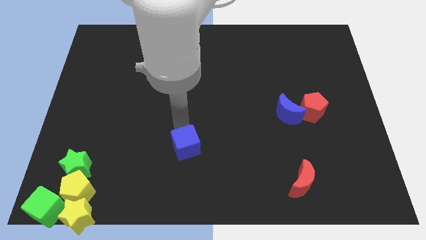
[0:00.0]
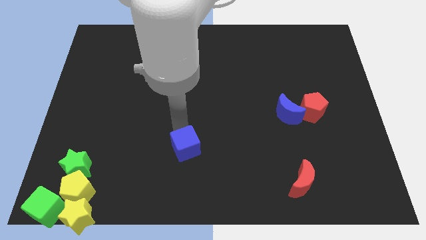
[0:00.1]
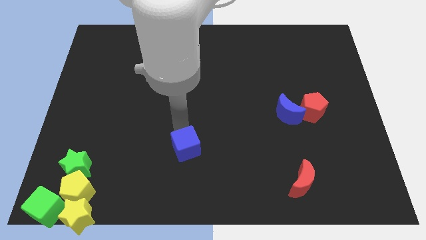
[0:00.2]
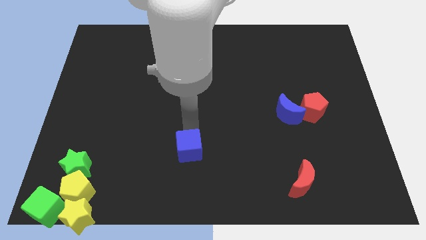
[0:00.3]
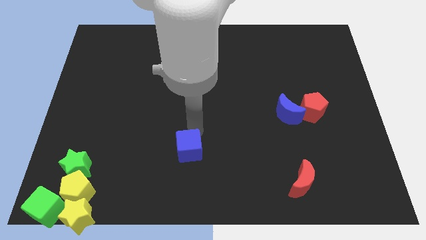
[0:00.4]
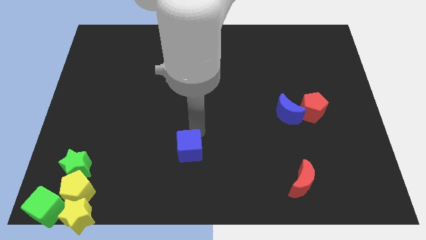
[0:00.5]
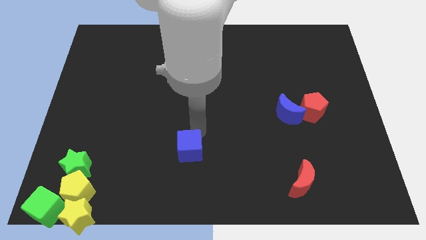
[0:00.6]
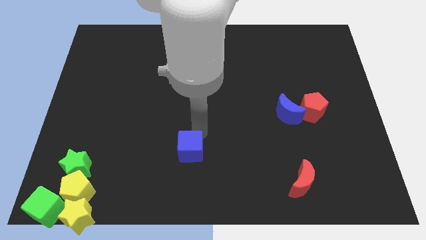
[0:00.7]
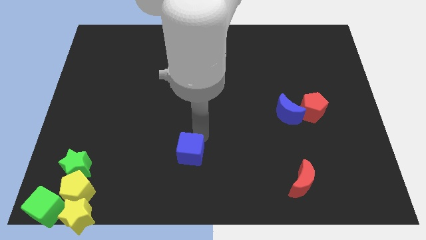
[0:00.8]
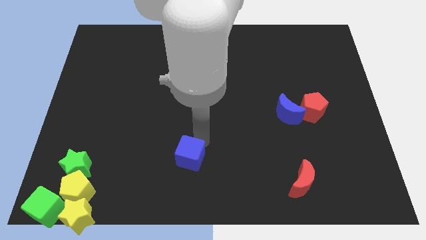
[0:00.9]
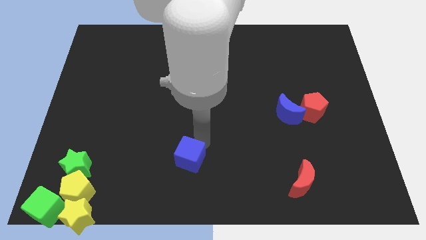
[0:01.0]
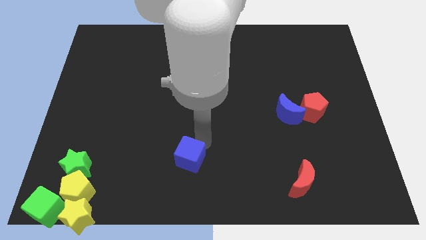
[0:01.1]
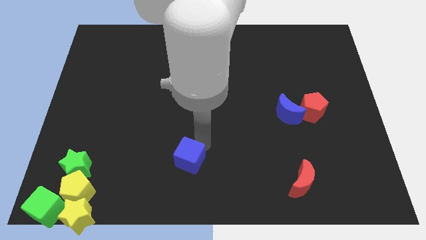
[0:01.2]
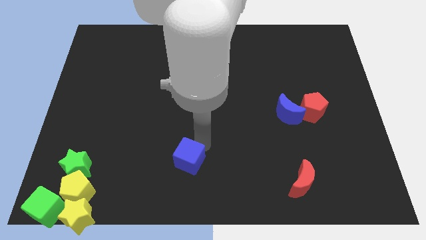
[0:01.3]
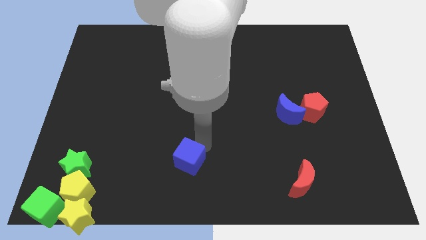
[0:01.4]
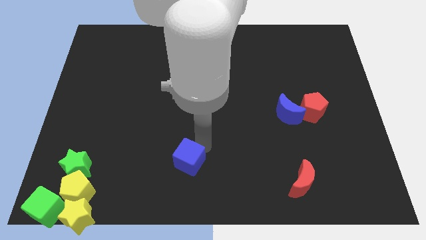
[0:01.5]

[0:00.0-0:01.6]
push the blue cube to the bottom of the board

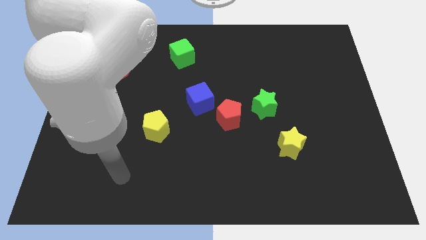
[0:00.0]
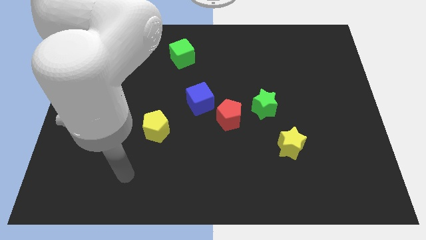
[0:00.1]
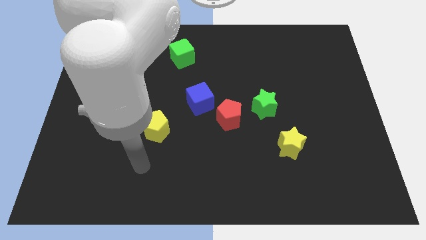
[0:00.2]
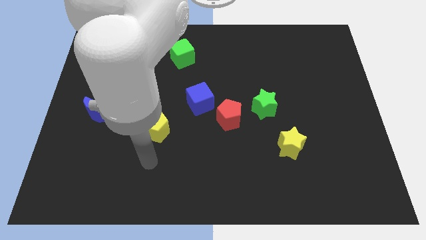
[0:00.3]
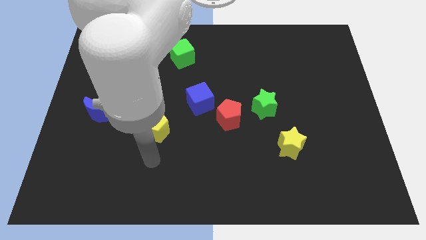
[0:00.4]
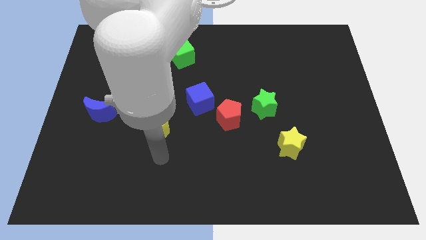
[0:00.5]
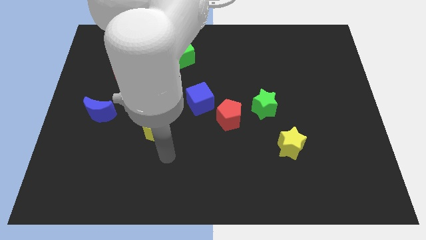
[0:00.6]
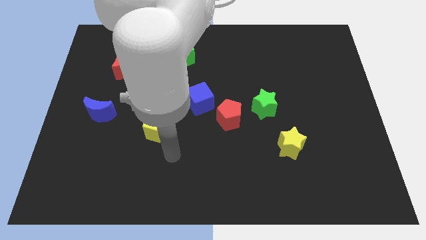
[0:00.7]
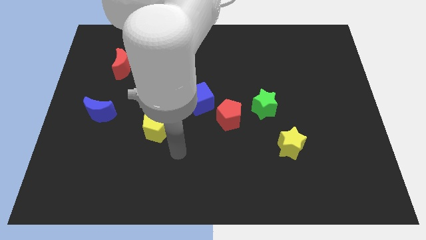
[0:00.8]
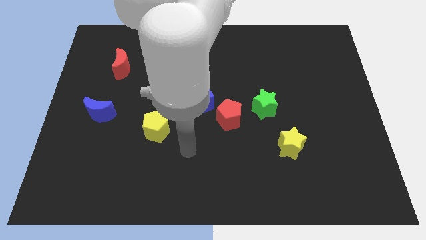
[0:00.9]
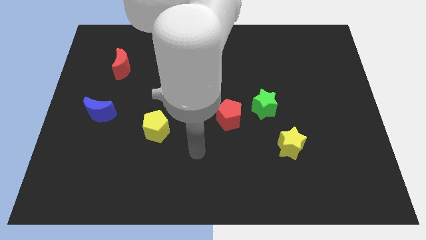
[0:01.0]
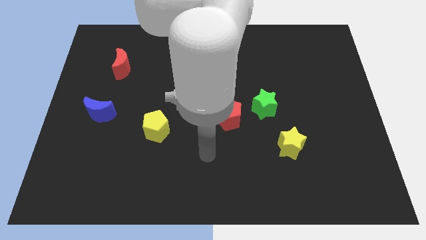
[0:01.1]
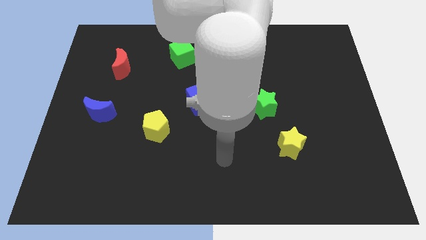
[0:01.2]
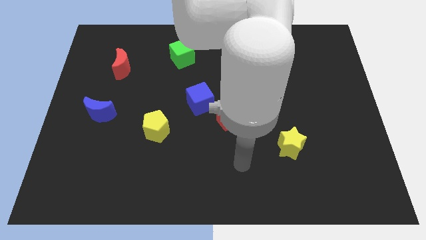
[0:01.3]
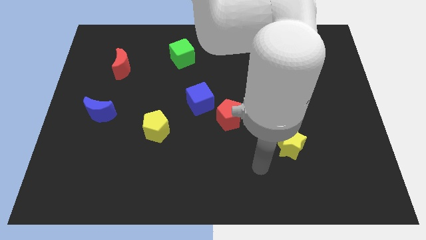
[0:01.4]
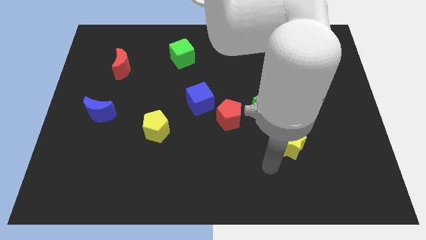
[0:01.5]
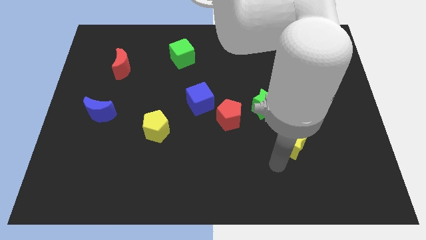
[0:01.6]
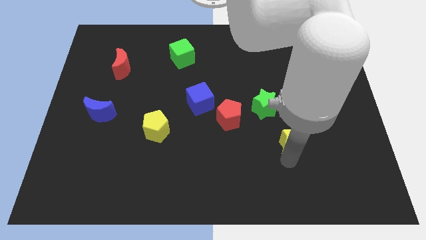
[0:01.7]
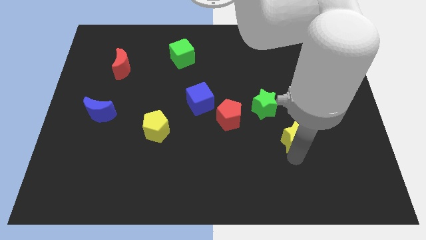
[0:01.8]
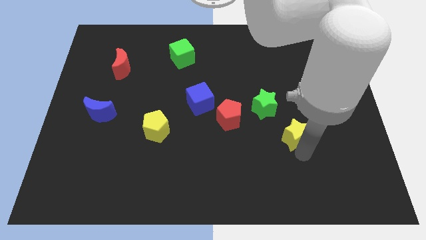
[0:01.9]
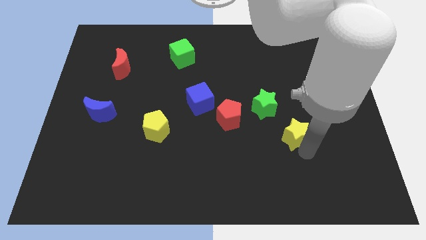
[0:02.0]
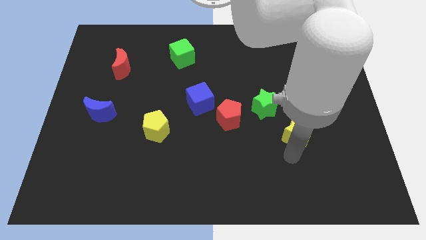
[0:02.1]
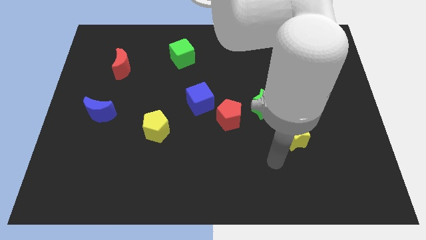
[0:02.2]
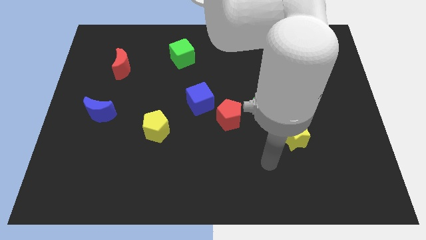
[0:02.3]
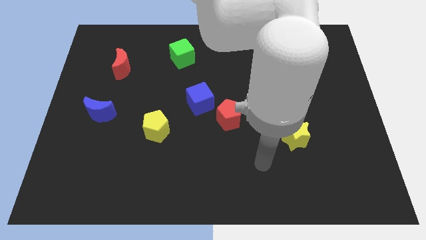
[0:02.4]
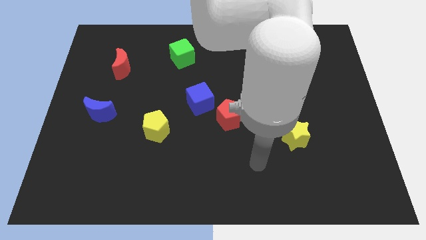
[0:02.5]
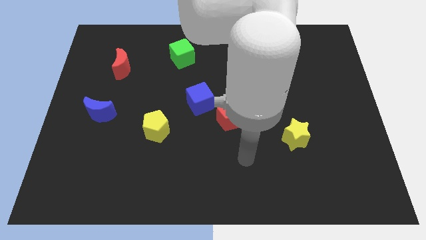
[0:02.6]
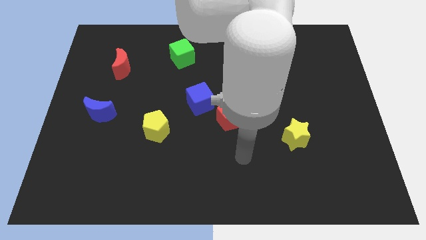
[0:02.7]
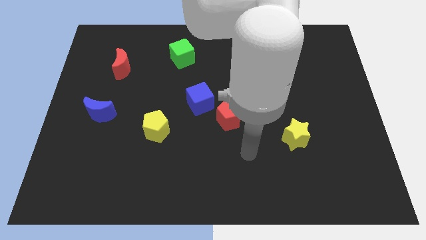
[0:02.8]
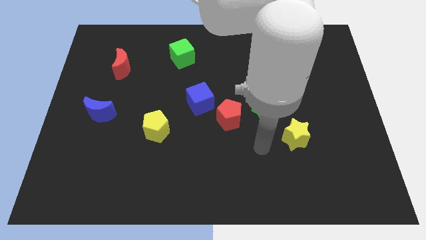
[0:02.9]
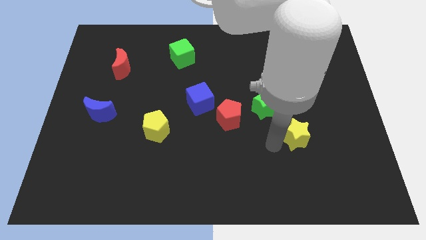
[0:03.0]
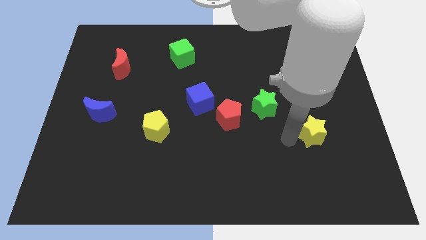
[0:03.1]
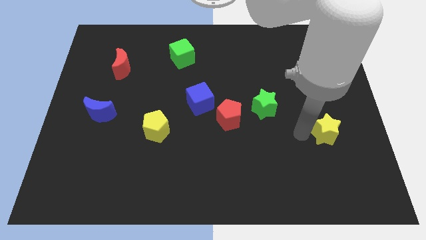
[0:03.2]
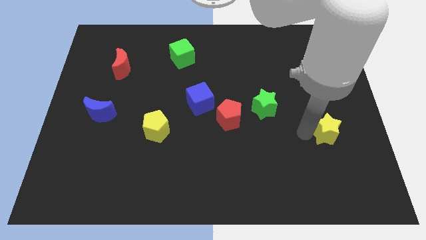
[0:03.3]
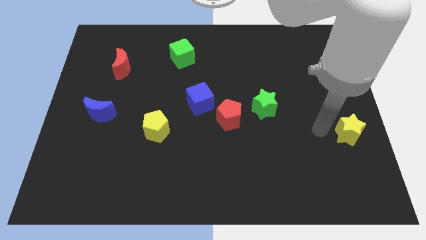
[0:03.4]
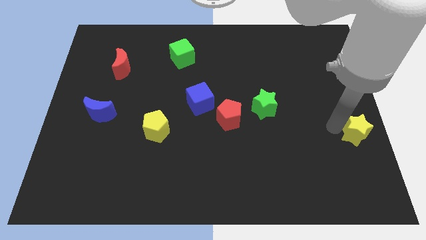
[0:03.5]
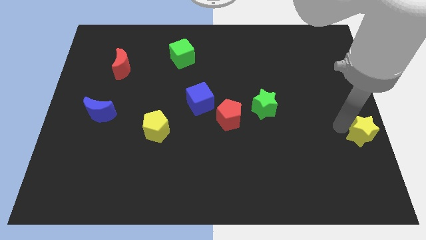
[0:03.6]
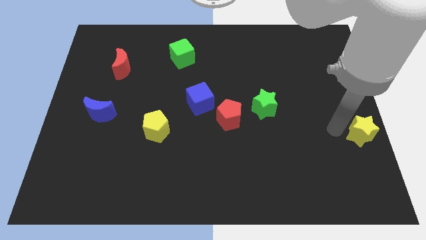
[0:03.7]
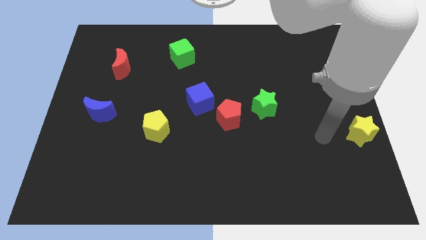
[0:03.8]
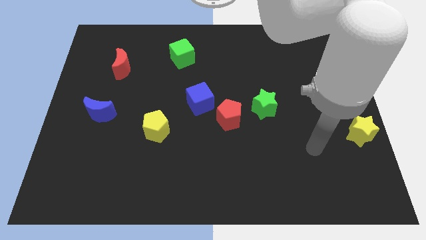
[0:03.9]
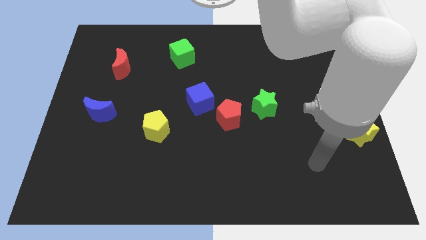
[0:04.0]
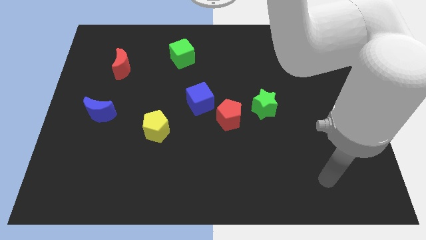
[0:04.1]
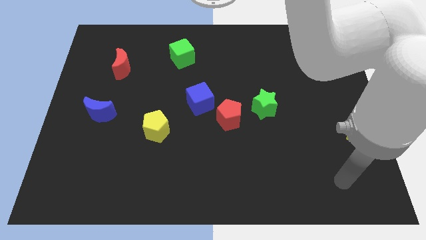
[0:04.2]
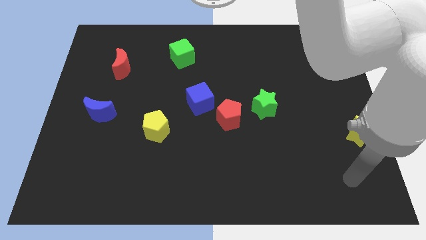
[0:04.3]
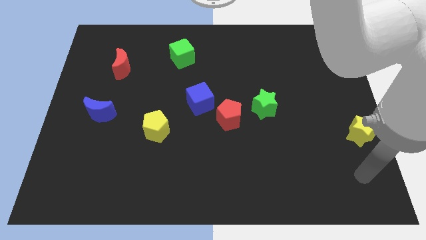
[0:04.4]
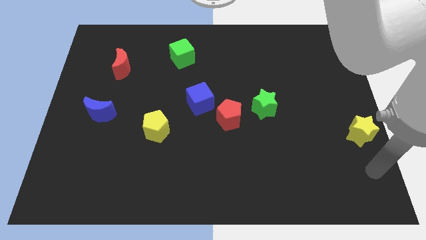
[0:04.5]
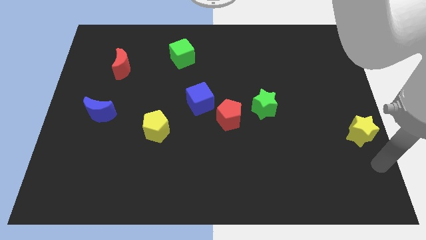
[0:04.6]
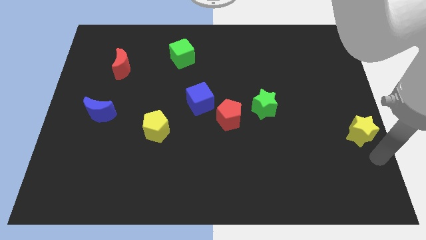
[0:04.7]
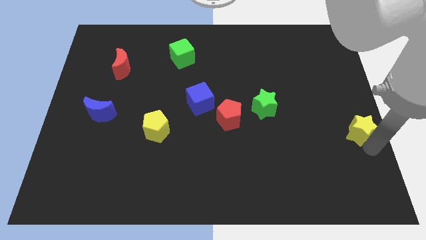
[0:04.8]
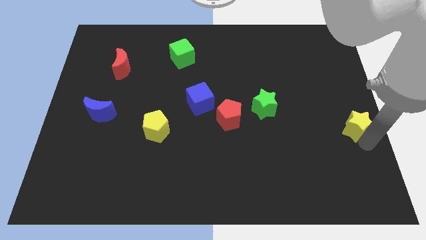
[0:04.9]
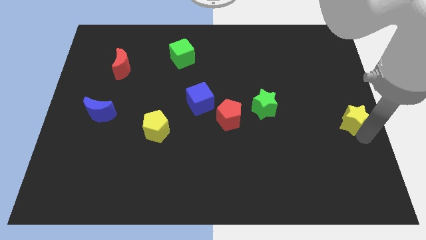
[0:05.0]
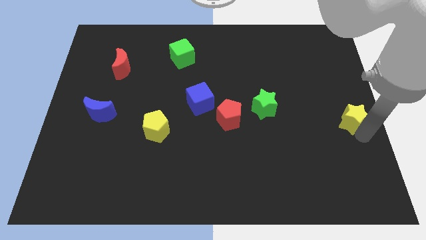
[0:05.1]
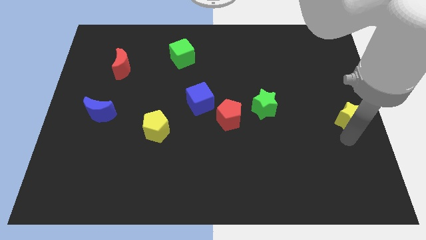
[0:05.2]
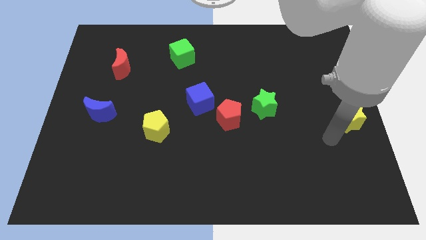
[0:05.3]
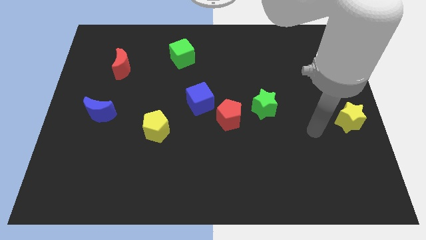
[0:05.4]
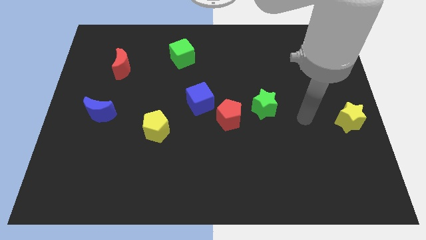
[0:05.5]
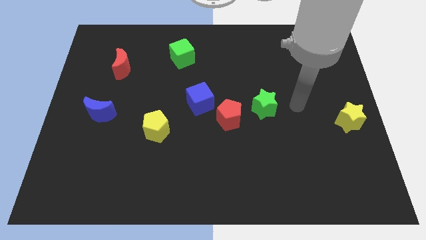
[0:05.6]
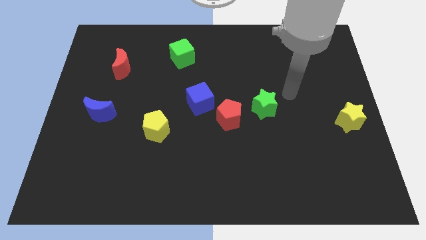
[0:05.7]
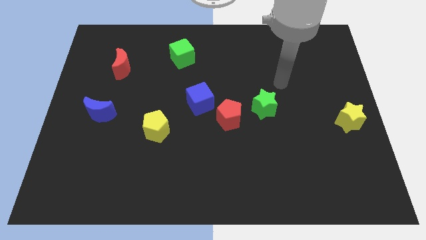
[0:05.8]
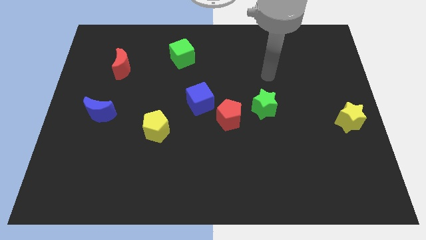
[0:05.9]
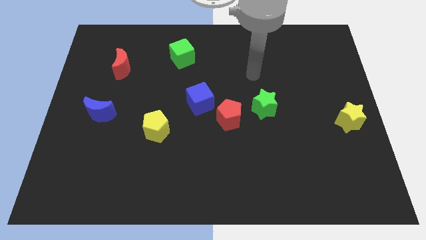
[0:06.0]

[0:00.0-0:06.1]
move the yellow star towards the center right

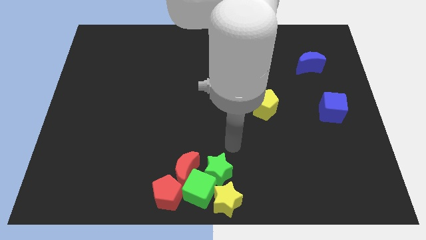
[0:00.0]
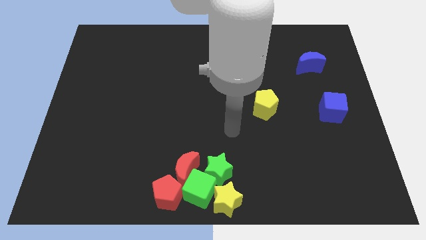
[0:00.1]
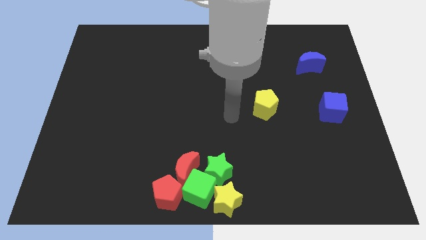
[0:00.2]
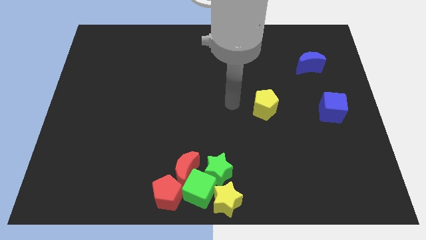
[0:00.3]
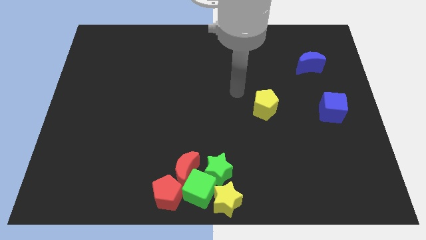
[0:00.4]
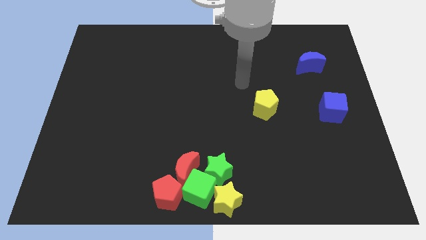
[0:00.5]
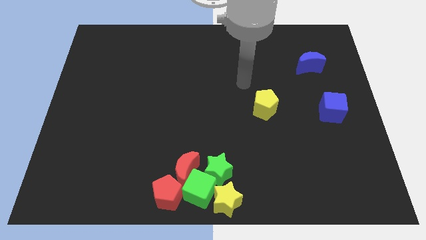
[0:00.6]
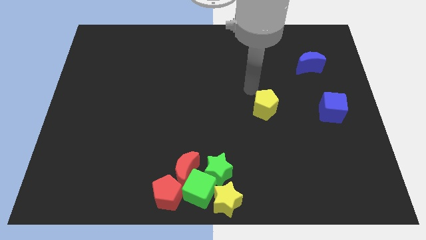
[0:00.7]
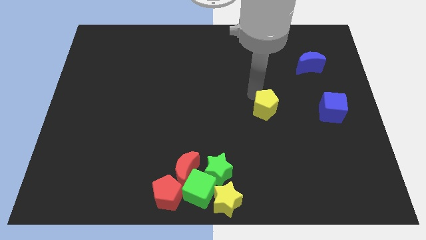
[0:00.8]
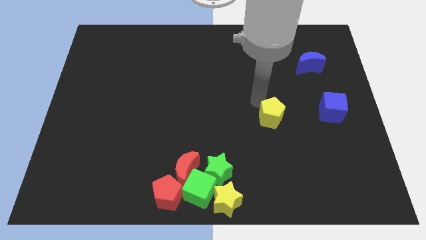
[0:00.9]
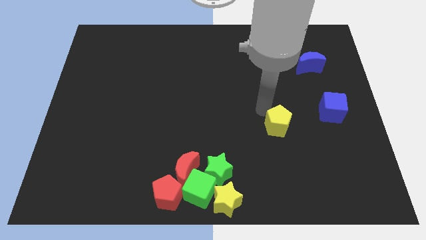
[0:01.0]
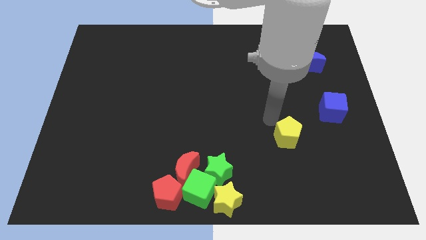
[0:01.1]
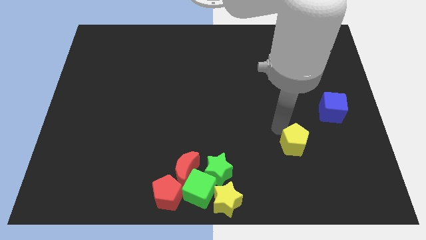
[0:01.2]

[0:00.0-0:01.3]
move the yellow pentagon downwards

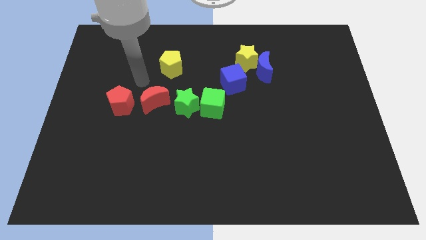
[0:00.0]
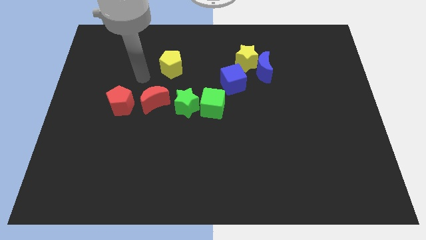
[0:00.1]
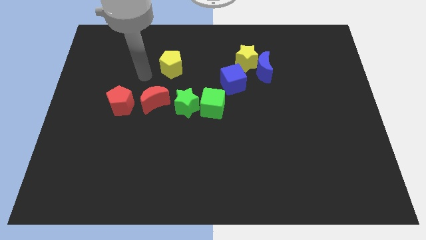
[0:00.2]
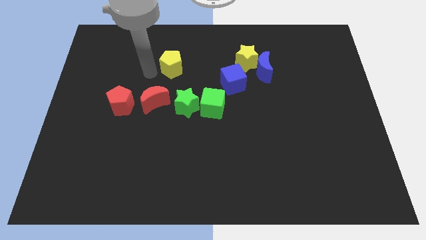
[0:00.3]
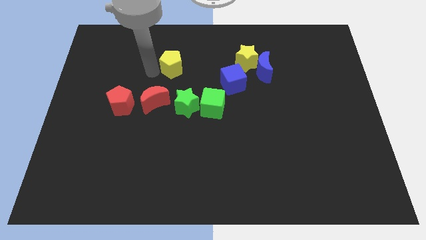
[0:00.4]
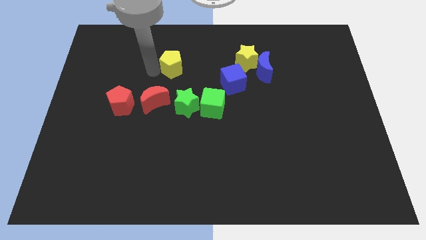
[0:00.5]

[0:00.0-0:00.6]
move the arm left to the yellow pentagon
